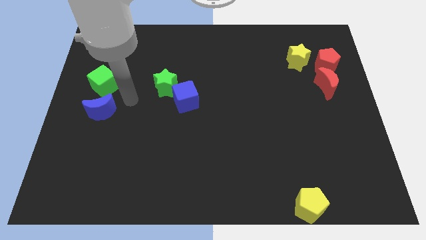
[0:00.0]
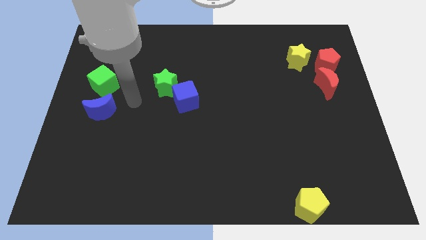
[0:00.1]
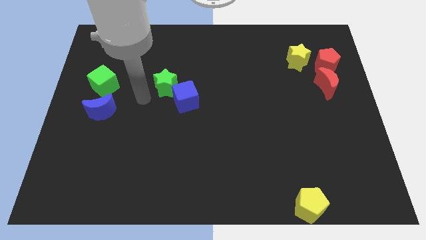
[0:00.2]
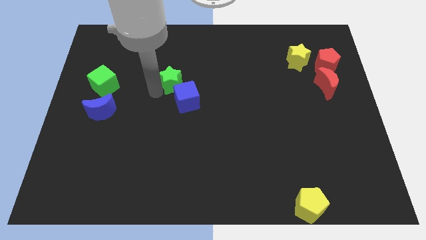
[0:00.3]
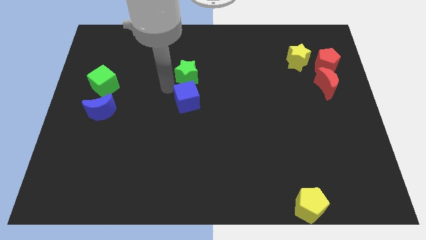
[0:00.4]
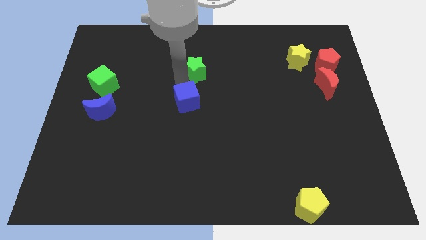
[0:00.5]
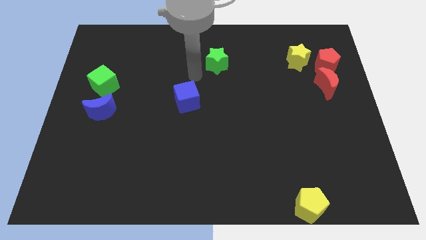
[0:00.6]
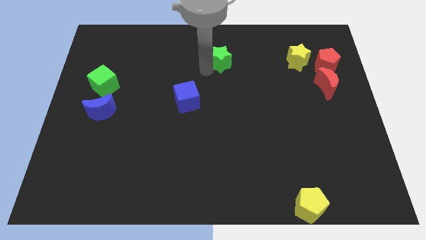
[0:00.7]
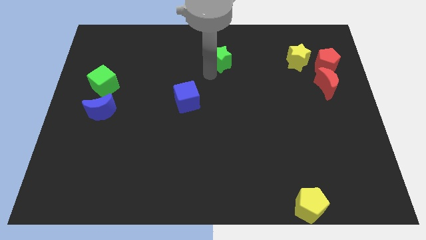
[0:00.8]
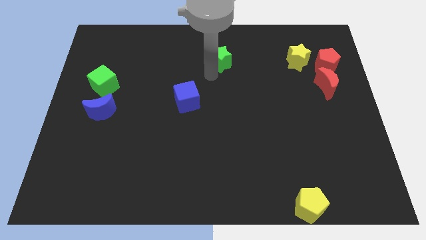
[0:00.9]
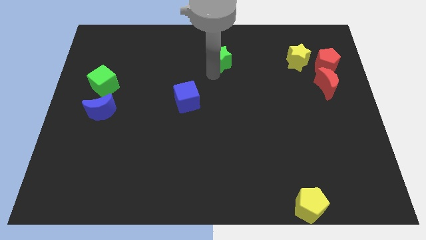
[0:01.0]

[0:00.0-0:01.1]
move green star diagonally towards the top

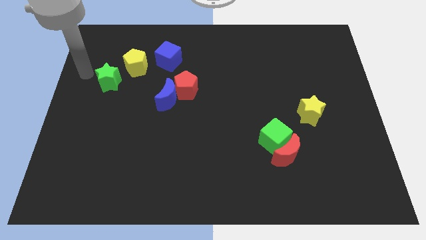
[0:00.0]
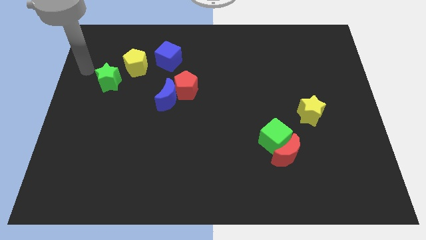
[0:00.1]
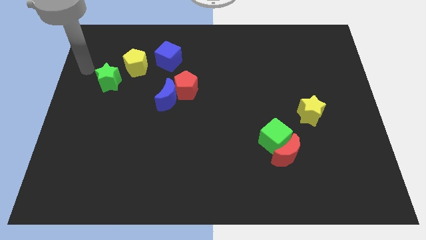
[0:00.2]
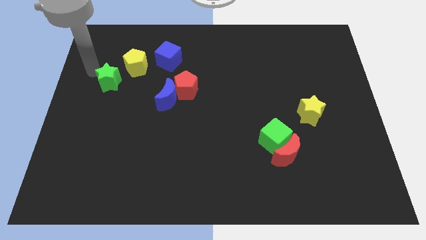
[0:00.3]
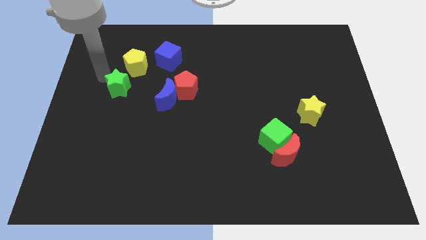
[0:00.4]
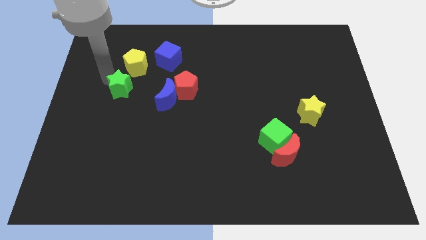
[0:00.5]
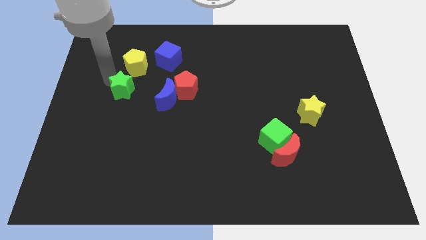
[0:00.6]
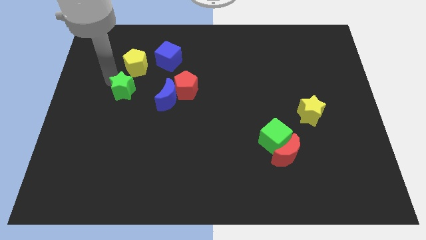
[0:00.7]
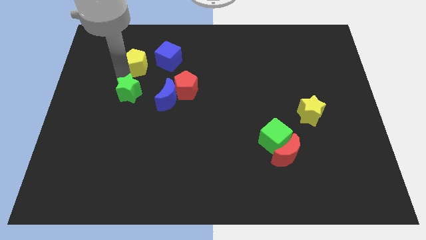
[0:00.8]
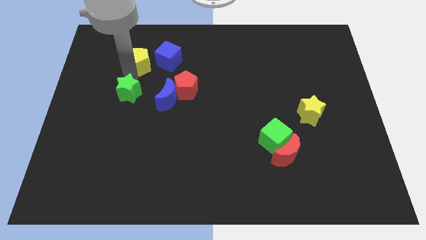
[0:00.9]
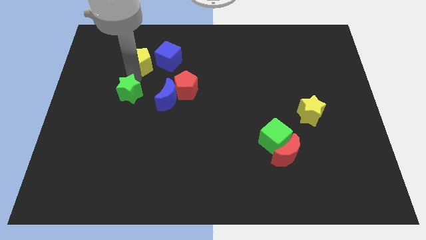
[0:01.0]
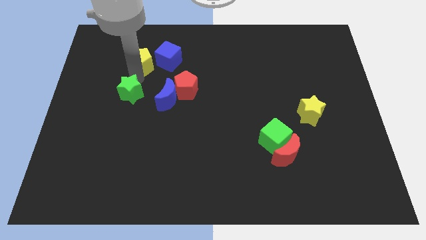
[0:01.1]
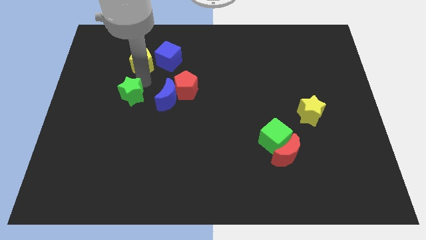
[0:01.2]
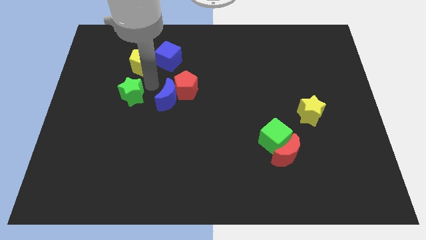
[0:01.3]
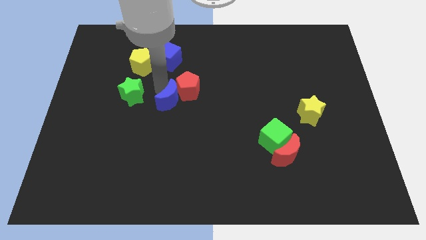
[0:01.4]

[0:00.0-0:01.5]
slightly move the green star below the yellow pentagon

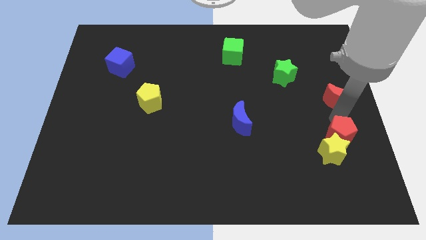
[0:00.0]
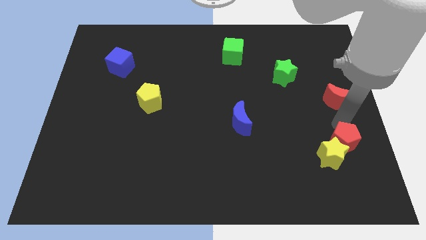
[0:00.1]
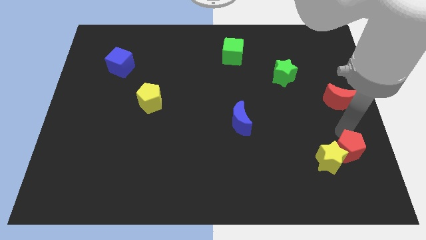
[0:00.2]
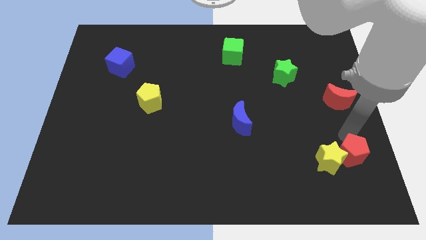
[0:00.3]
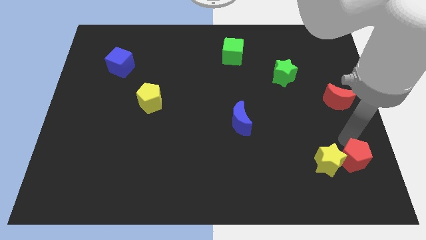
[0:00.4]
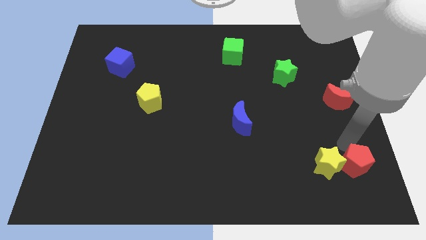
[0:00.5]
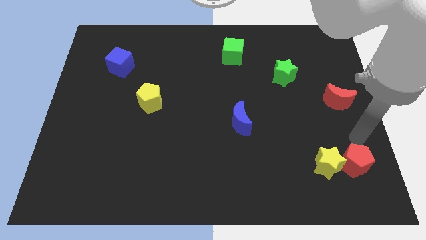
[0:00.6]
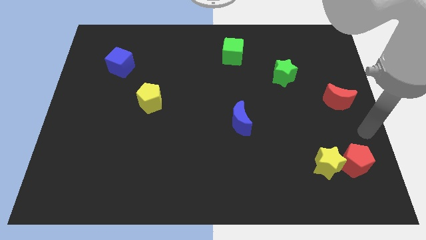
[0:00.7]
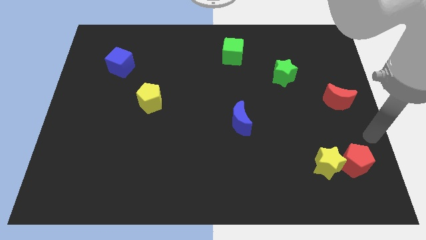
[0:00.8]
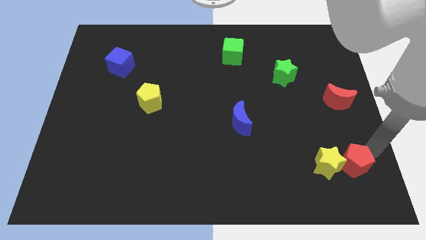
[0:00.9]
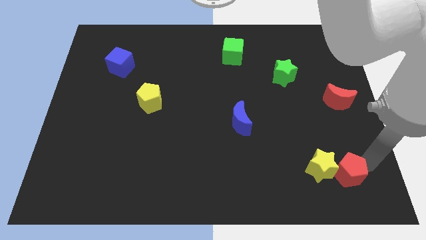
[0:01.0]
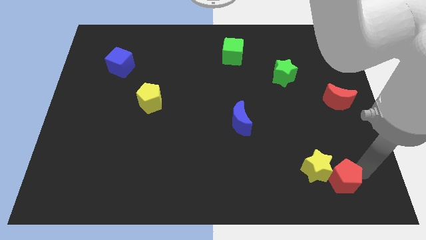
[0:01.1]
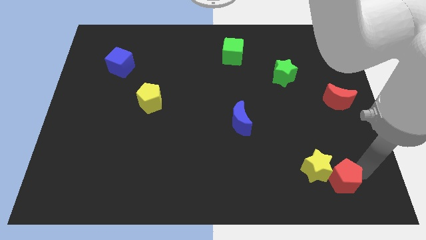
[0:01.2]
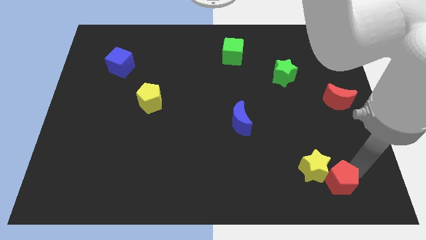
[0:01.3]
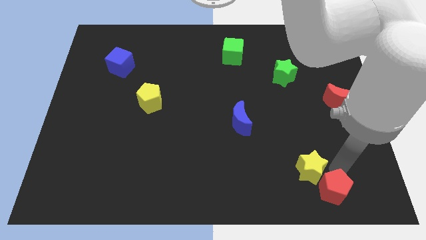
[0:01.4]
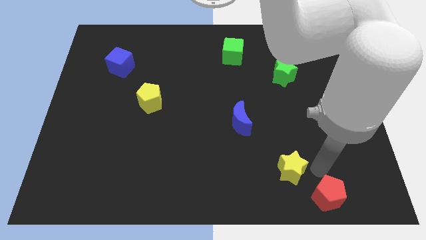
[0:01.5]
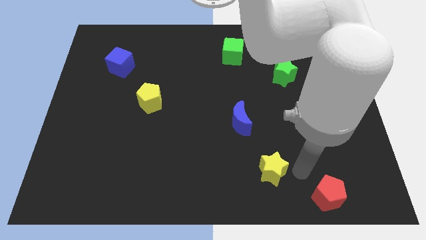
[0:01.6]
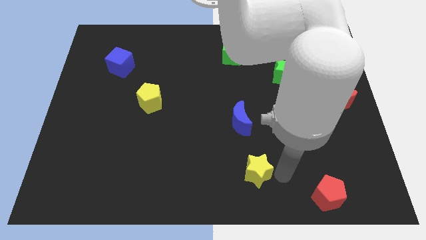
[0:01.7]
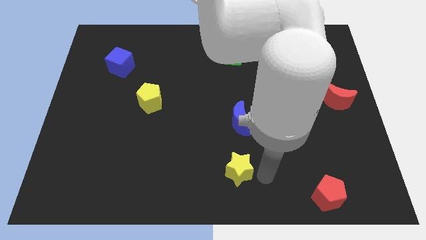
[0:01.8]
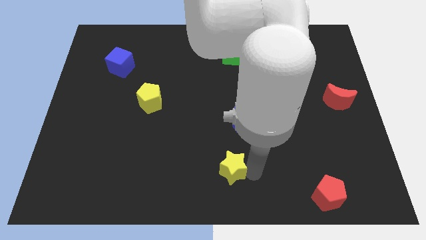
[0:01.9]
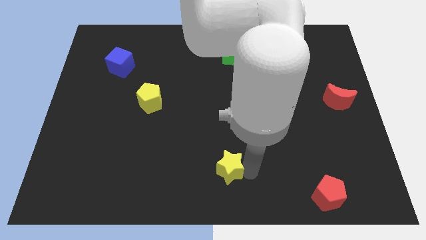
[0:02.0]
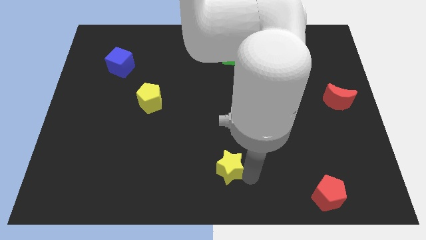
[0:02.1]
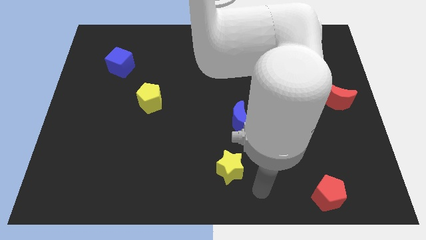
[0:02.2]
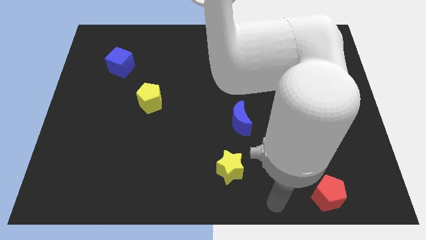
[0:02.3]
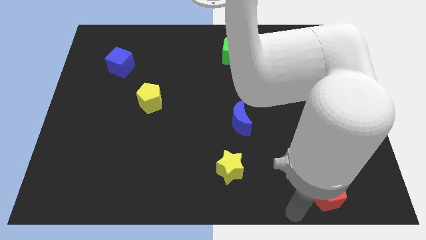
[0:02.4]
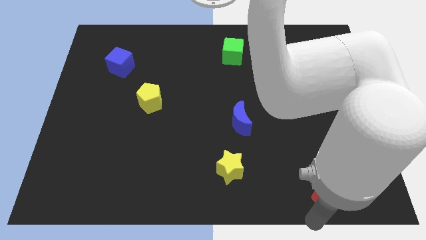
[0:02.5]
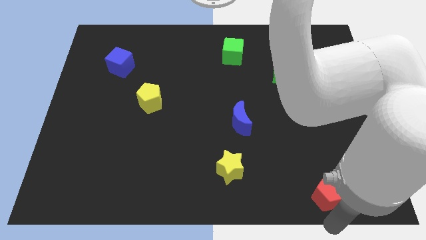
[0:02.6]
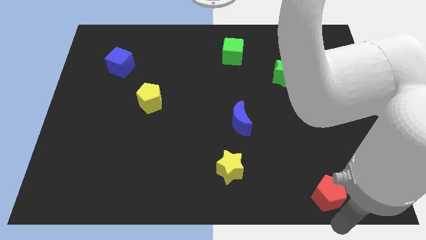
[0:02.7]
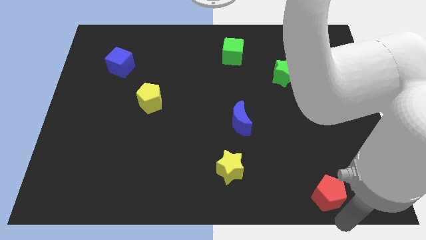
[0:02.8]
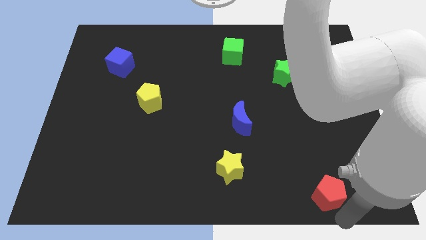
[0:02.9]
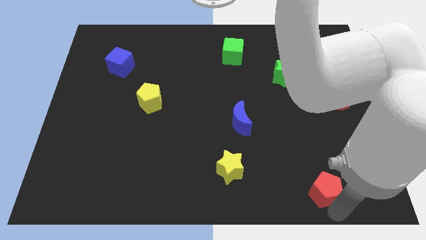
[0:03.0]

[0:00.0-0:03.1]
separate the red pentagon and yellow star

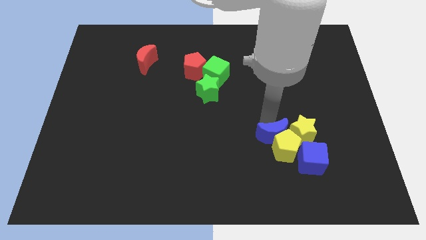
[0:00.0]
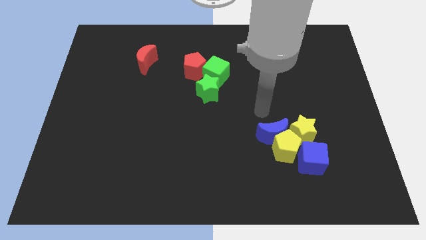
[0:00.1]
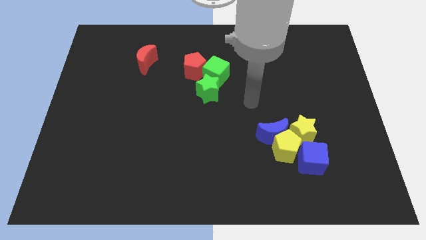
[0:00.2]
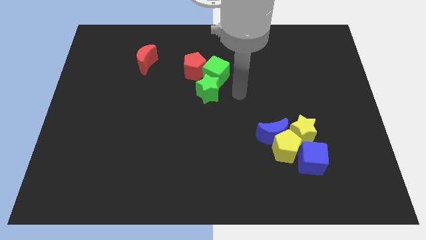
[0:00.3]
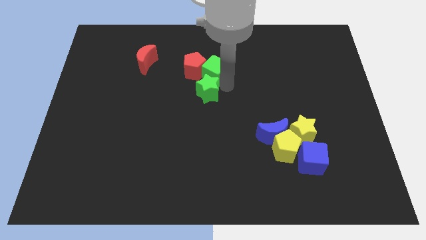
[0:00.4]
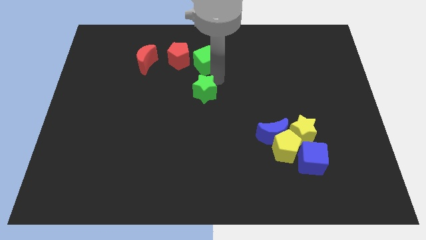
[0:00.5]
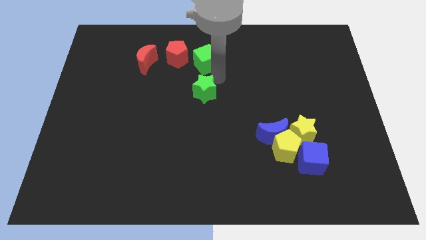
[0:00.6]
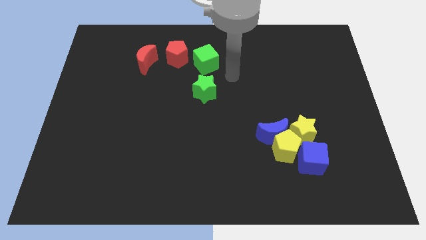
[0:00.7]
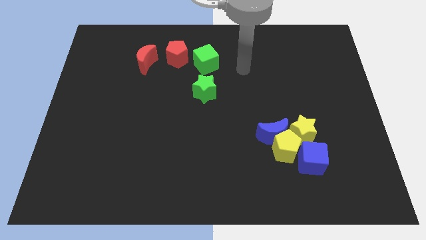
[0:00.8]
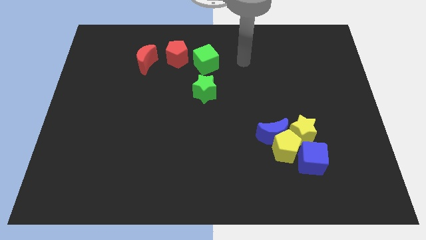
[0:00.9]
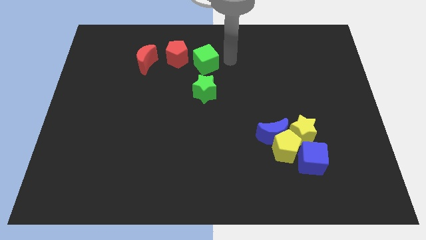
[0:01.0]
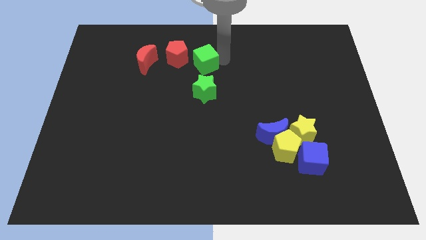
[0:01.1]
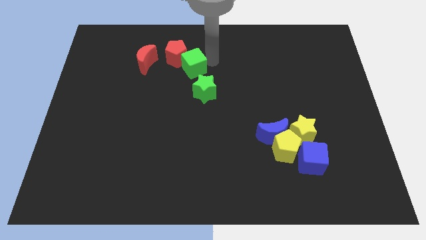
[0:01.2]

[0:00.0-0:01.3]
move your arm away from the blue moon

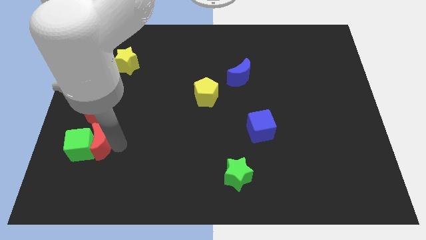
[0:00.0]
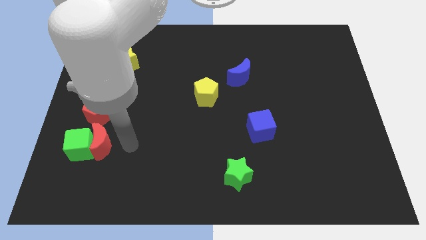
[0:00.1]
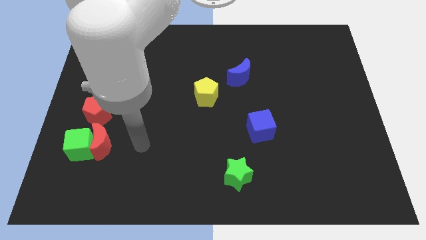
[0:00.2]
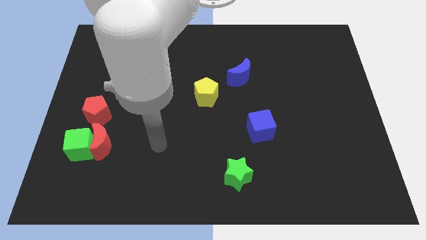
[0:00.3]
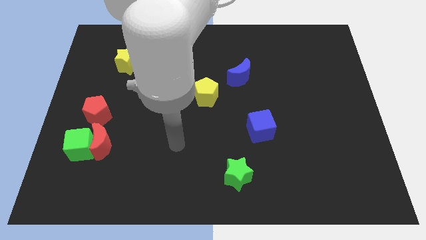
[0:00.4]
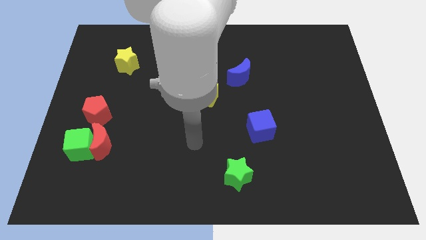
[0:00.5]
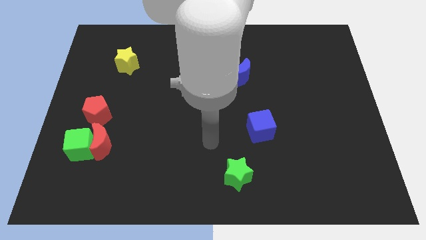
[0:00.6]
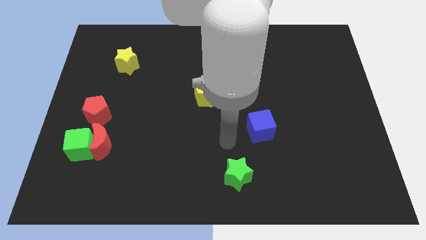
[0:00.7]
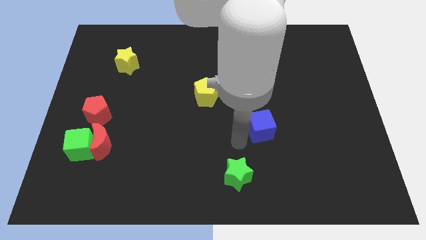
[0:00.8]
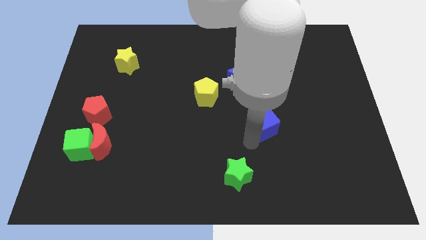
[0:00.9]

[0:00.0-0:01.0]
move your arm to the left of blue cube

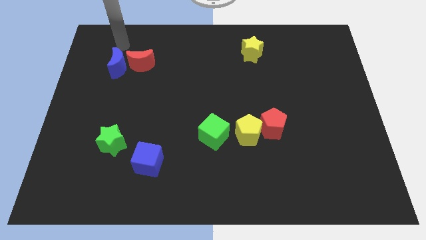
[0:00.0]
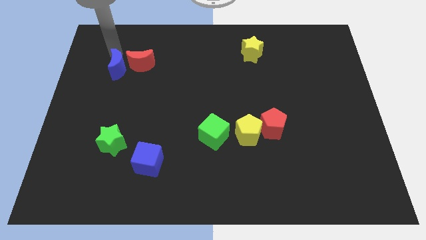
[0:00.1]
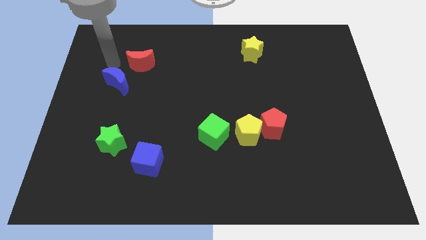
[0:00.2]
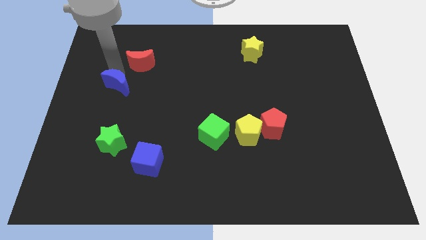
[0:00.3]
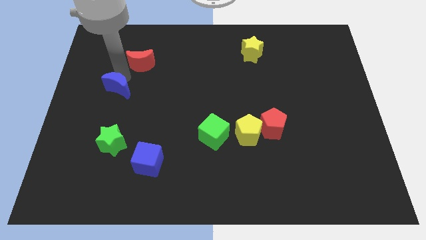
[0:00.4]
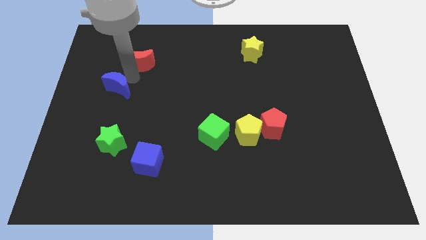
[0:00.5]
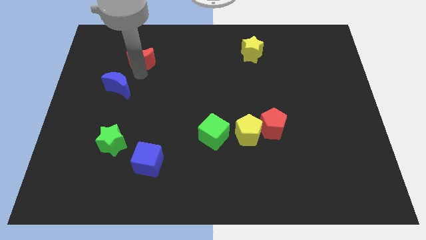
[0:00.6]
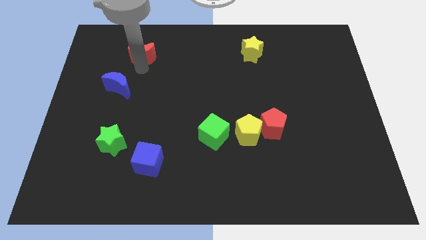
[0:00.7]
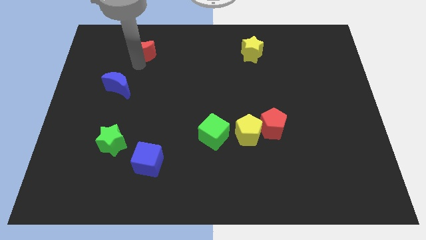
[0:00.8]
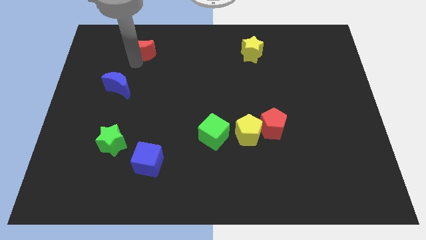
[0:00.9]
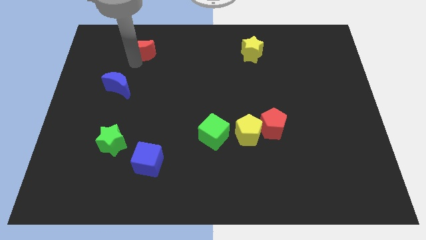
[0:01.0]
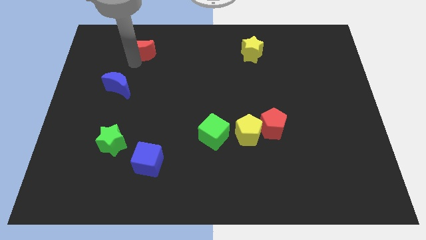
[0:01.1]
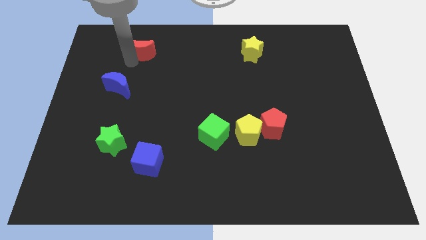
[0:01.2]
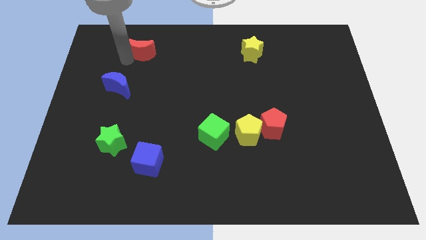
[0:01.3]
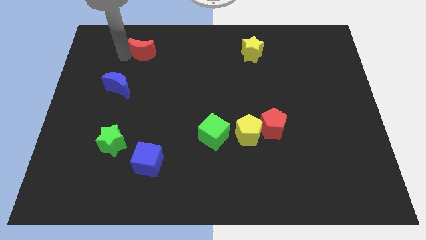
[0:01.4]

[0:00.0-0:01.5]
separate the blue crescent and red crescent from each others
